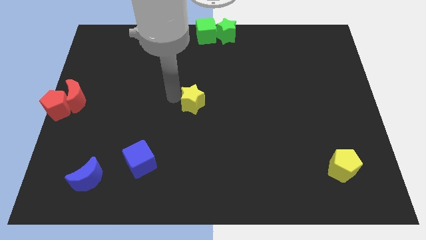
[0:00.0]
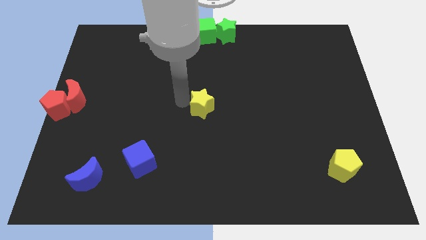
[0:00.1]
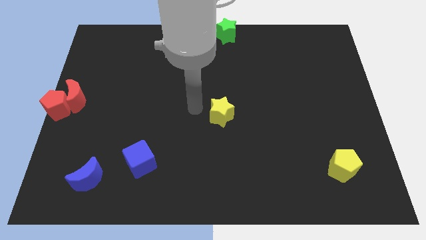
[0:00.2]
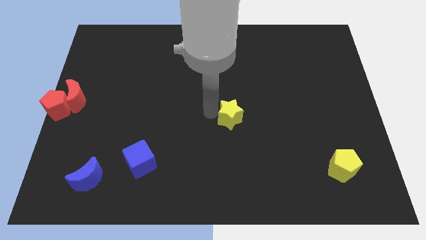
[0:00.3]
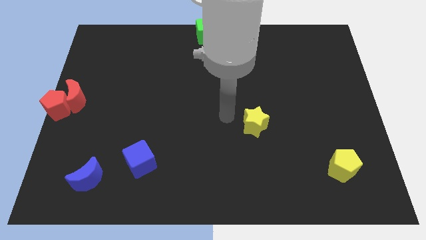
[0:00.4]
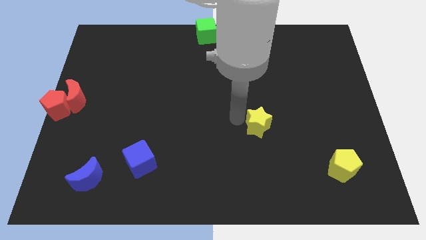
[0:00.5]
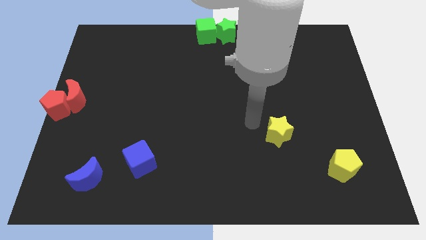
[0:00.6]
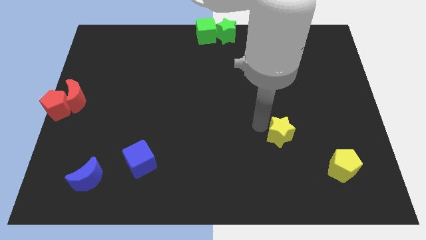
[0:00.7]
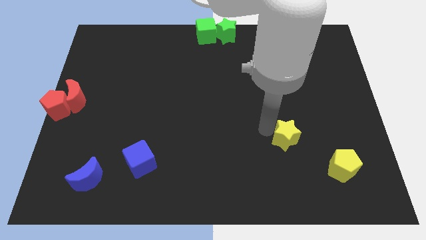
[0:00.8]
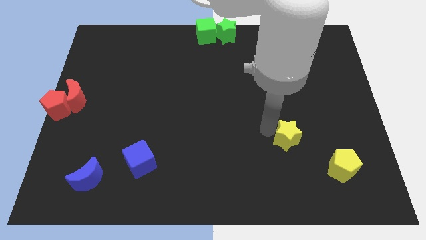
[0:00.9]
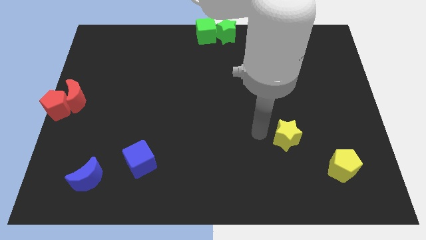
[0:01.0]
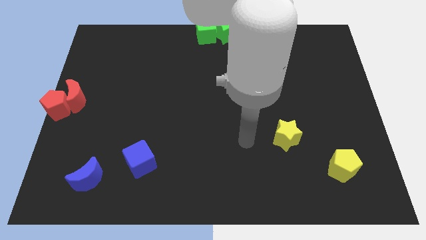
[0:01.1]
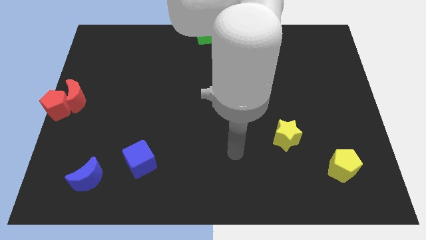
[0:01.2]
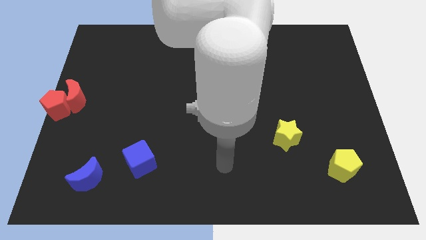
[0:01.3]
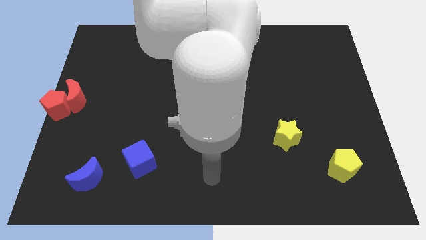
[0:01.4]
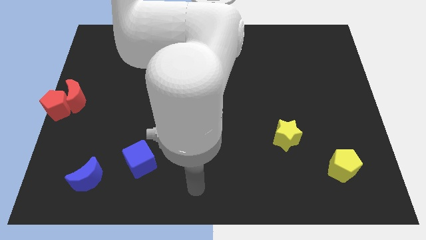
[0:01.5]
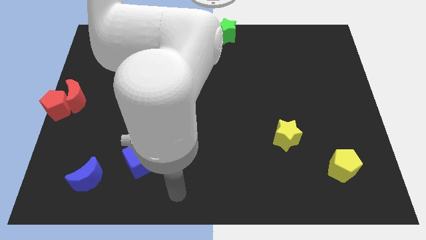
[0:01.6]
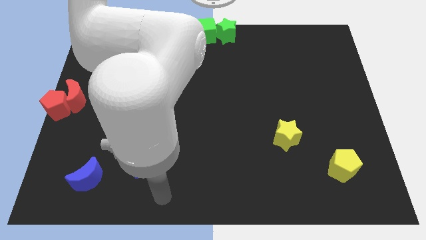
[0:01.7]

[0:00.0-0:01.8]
move the yellow star towards the right side of the board

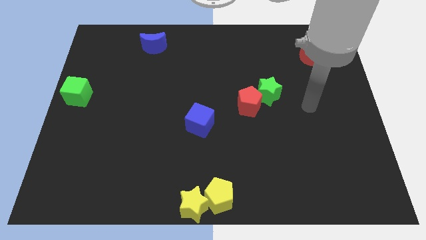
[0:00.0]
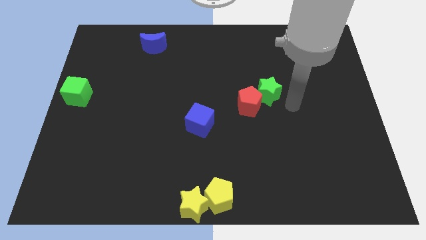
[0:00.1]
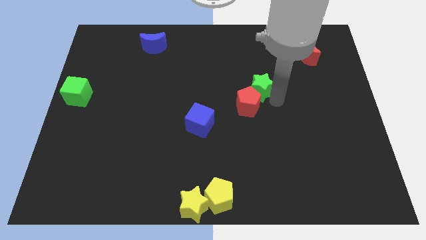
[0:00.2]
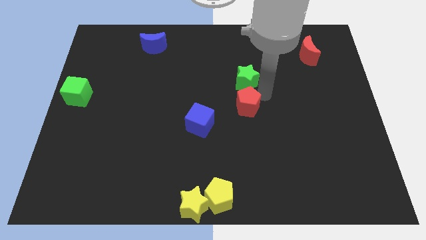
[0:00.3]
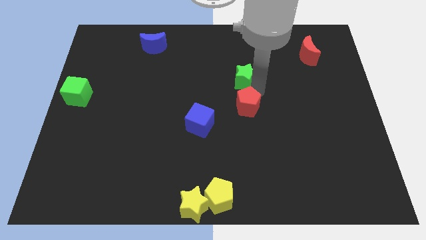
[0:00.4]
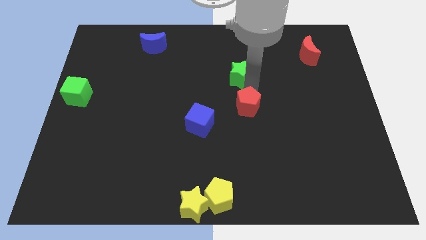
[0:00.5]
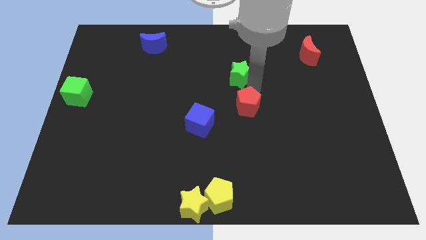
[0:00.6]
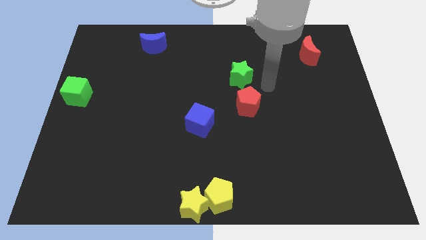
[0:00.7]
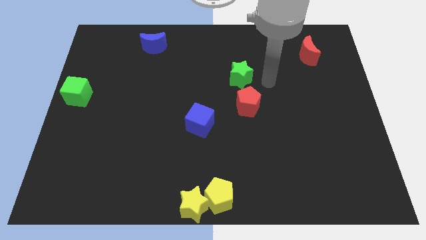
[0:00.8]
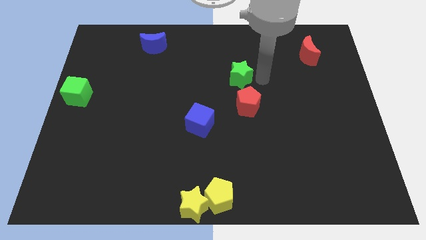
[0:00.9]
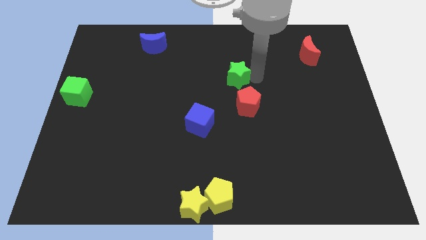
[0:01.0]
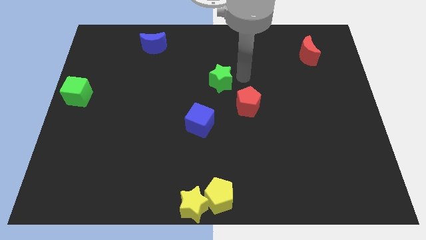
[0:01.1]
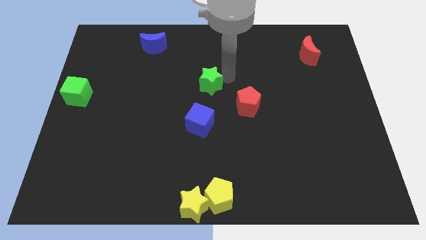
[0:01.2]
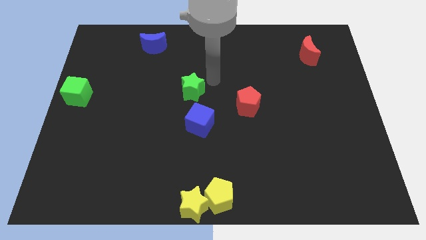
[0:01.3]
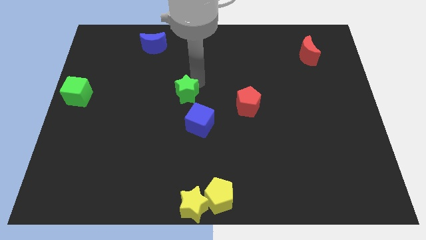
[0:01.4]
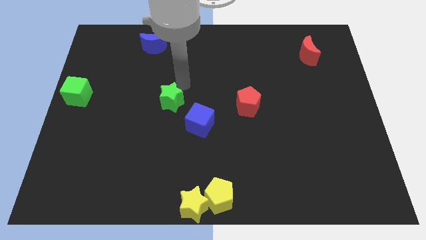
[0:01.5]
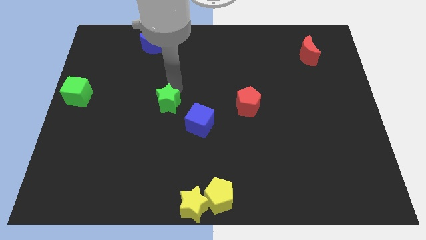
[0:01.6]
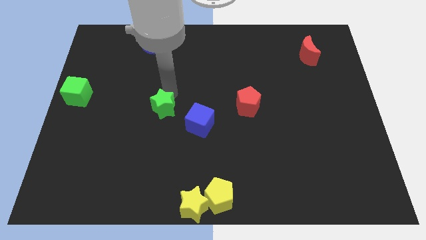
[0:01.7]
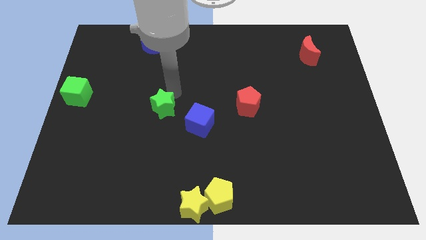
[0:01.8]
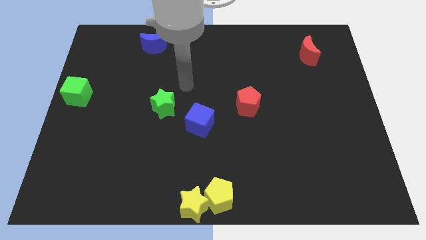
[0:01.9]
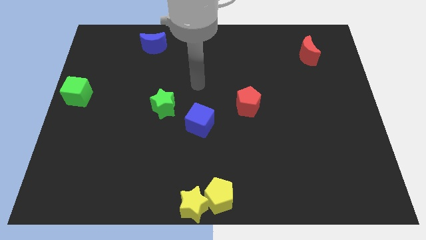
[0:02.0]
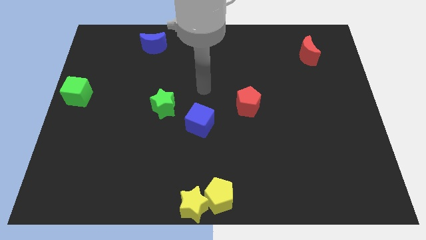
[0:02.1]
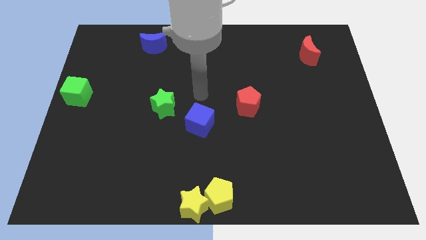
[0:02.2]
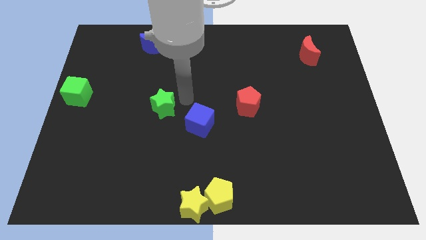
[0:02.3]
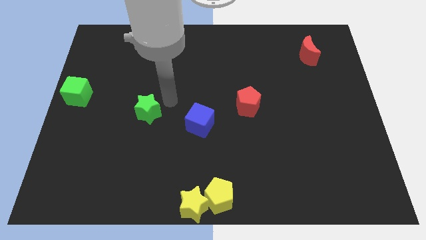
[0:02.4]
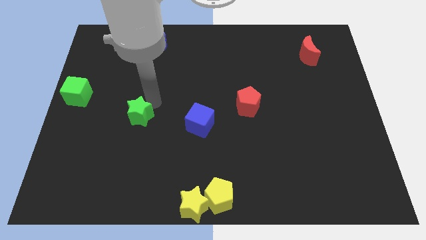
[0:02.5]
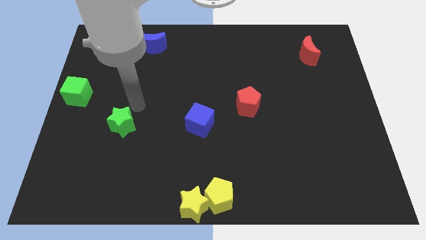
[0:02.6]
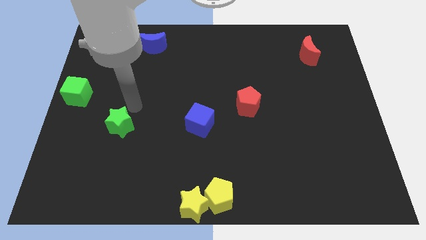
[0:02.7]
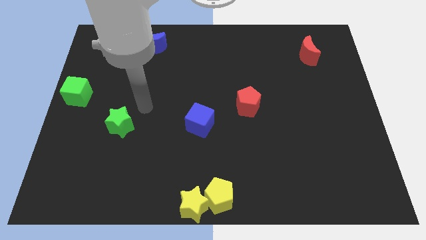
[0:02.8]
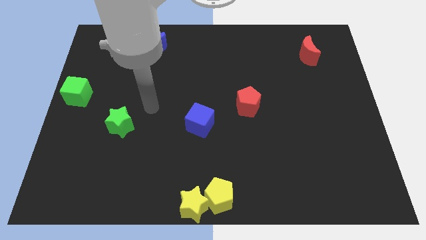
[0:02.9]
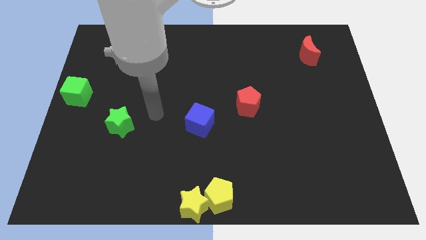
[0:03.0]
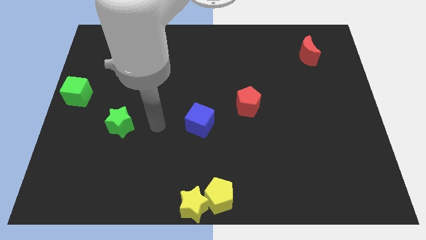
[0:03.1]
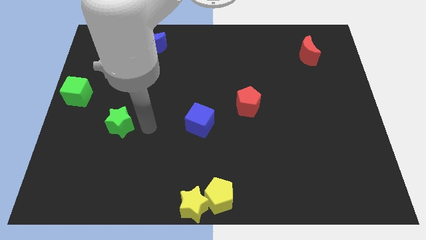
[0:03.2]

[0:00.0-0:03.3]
place the green star to the left of the blue cube

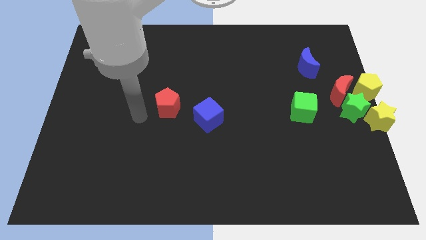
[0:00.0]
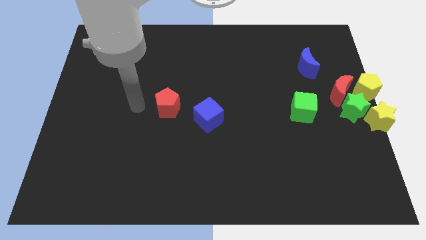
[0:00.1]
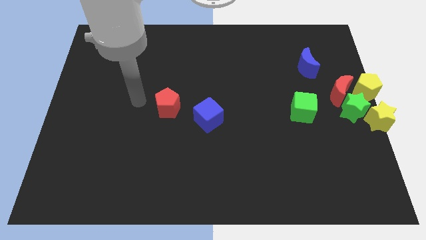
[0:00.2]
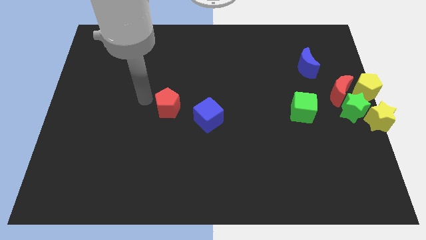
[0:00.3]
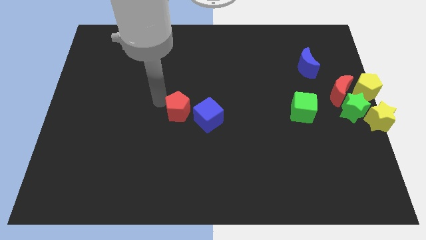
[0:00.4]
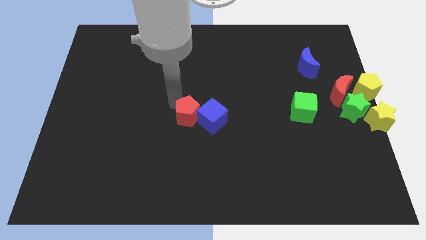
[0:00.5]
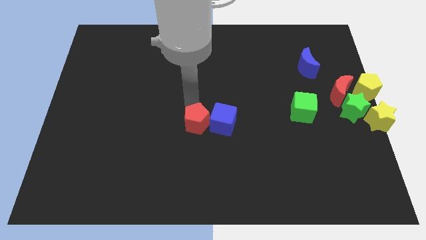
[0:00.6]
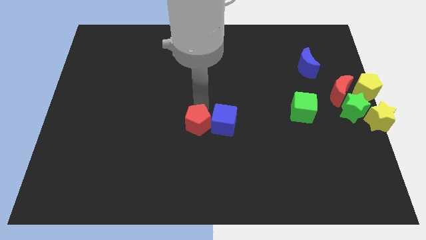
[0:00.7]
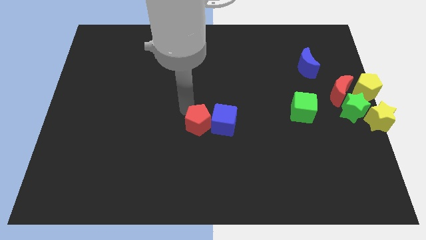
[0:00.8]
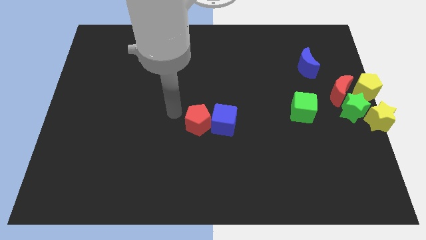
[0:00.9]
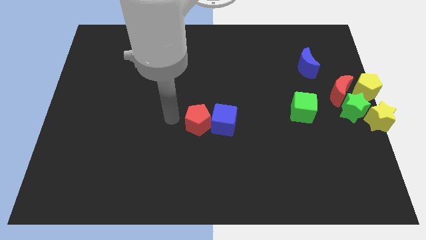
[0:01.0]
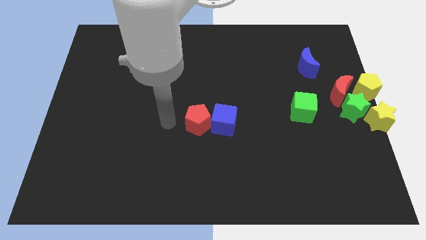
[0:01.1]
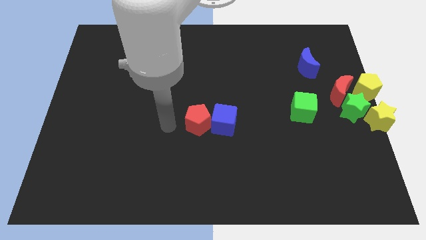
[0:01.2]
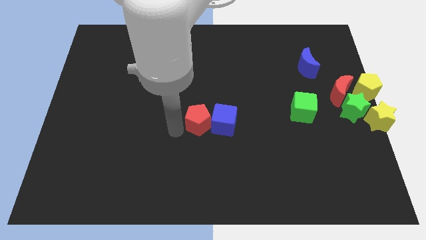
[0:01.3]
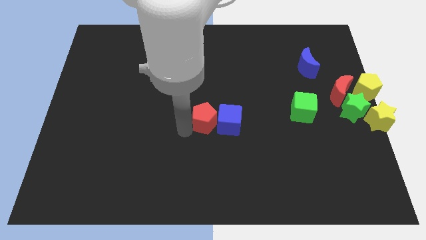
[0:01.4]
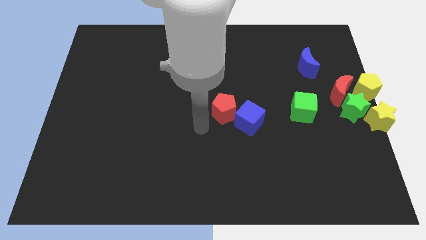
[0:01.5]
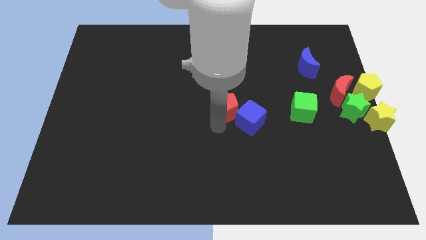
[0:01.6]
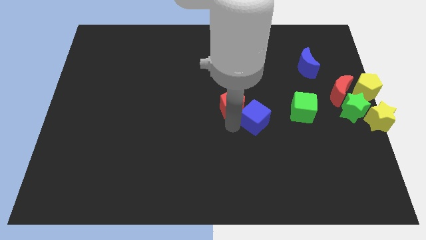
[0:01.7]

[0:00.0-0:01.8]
slide the red pentagon into the blue cube towards right

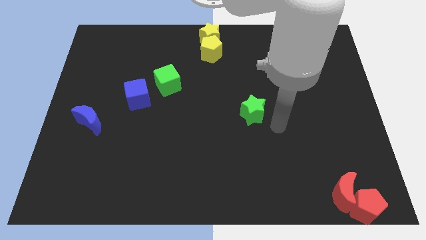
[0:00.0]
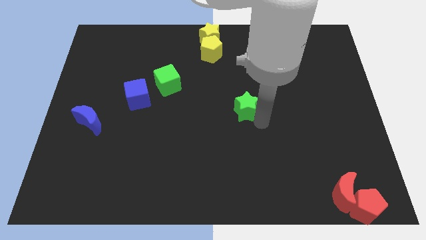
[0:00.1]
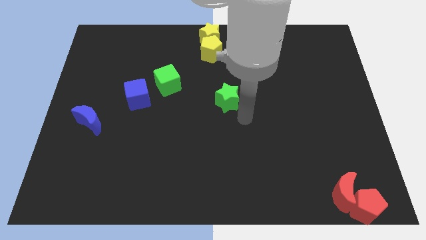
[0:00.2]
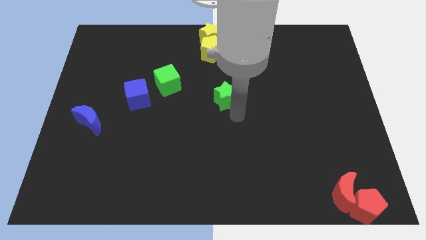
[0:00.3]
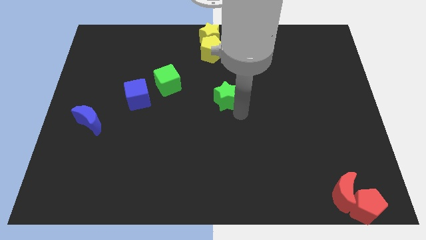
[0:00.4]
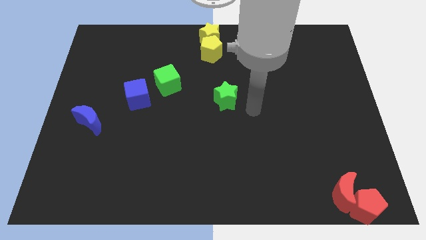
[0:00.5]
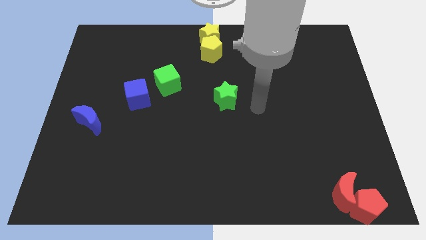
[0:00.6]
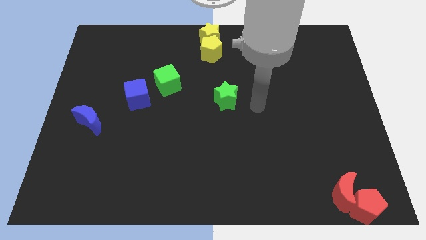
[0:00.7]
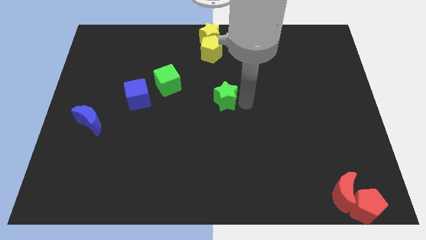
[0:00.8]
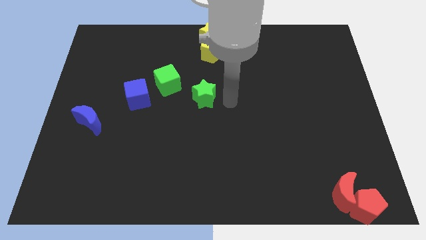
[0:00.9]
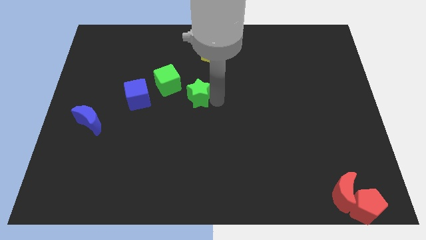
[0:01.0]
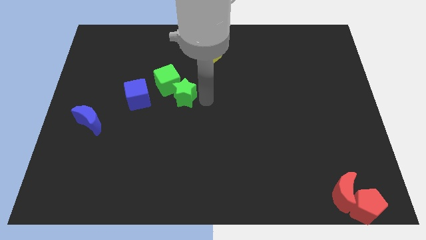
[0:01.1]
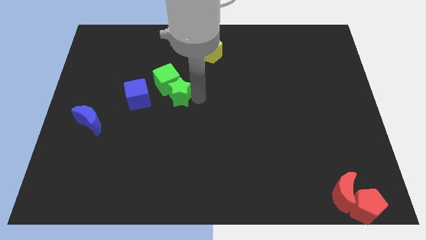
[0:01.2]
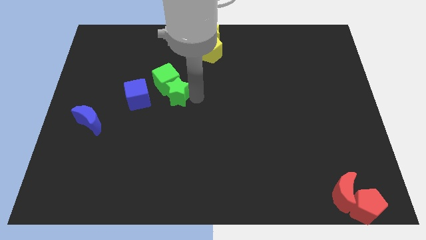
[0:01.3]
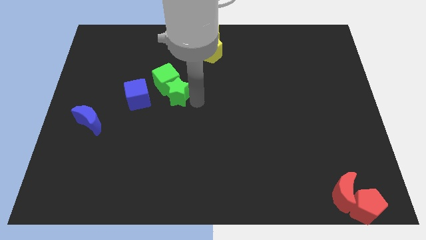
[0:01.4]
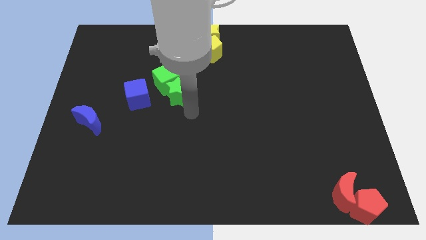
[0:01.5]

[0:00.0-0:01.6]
move the green star into the green cube

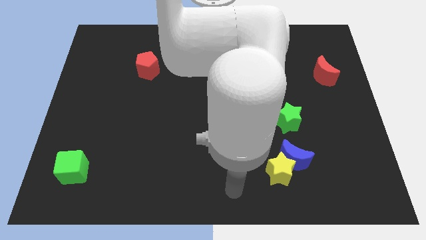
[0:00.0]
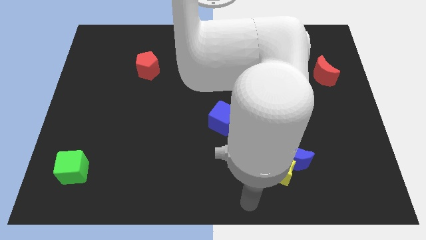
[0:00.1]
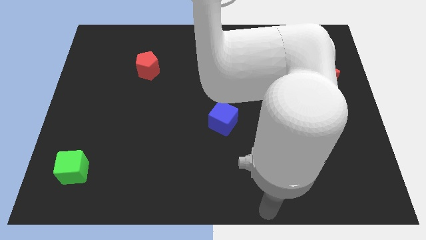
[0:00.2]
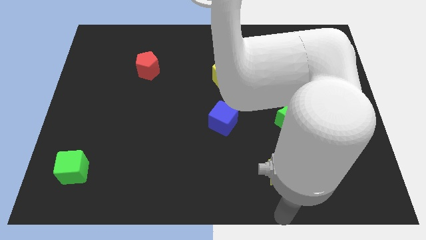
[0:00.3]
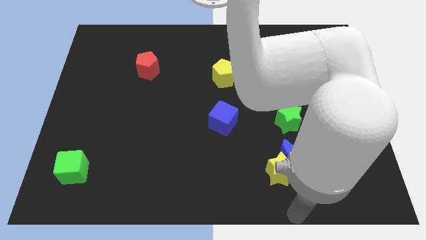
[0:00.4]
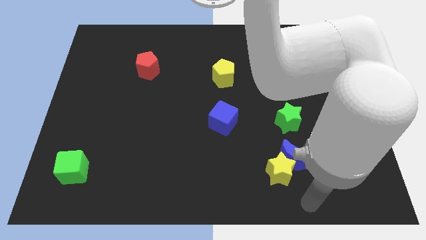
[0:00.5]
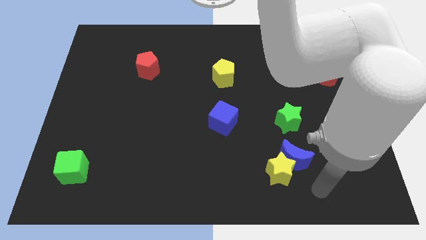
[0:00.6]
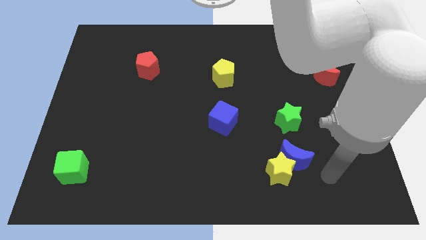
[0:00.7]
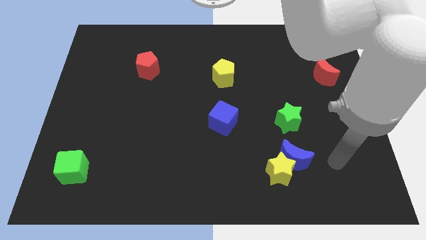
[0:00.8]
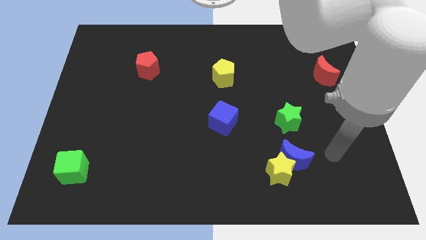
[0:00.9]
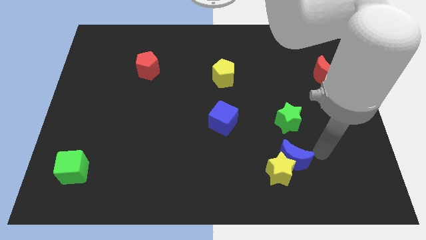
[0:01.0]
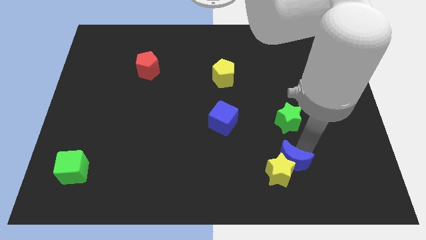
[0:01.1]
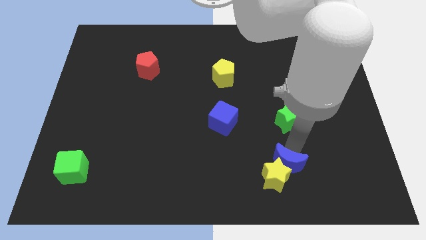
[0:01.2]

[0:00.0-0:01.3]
place your arm at the top of the blue crescent
